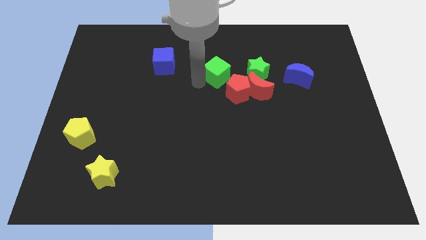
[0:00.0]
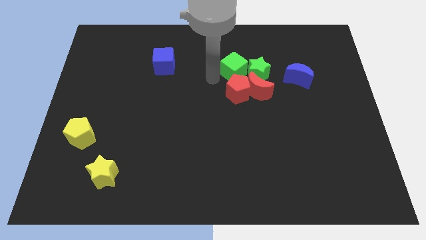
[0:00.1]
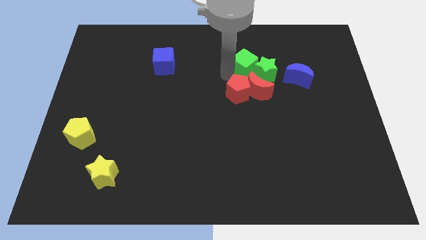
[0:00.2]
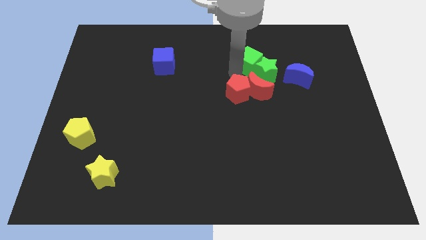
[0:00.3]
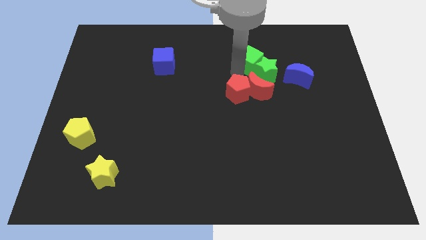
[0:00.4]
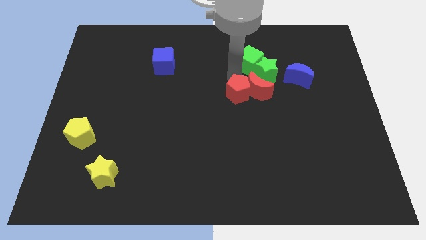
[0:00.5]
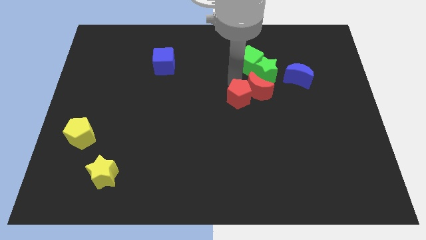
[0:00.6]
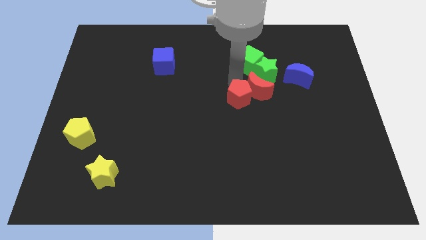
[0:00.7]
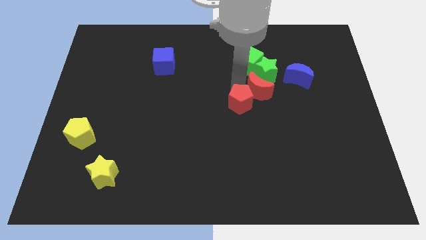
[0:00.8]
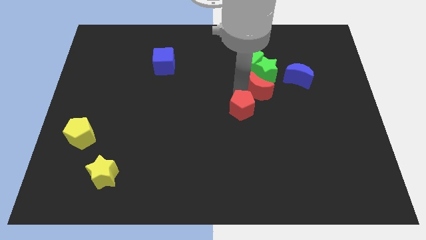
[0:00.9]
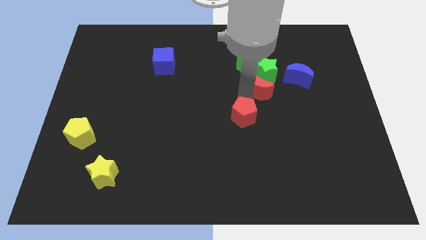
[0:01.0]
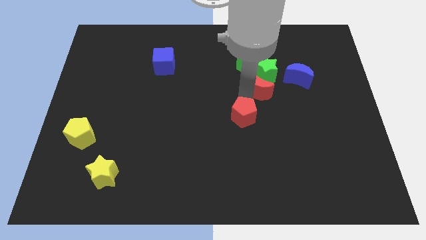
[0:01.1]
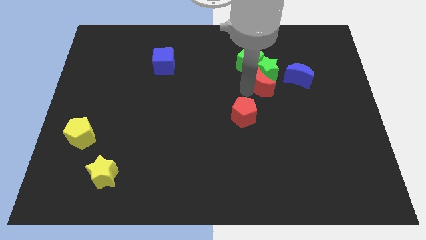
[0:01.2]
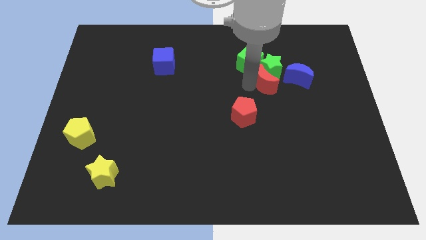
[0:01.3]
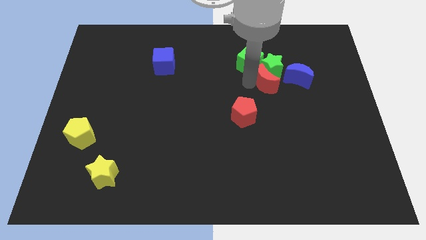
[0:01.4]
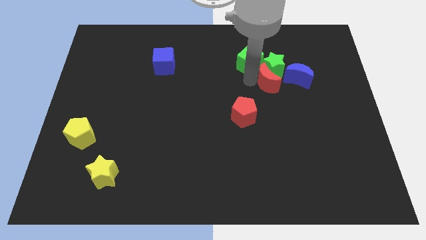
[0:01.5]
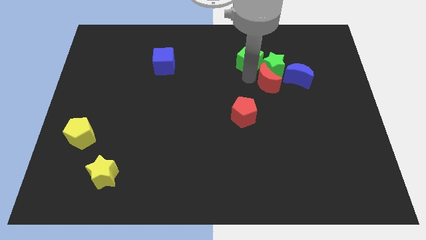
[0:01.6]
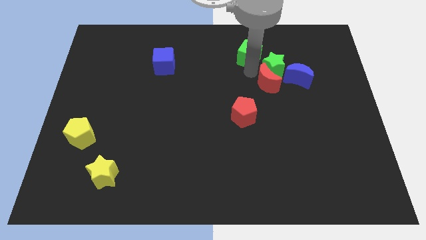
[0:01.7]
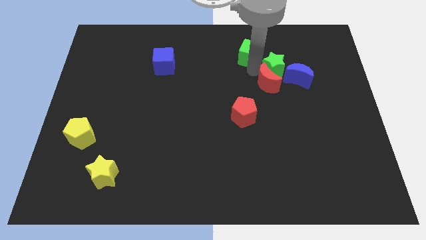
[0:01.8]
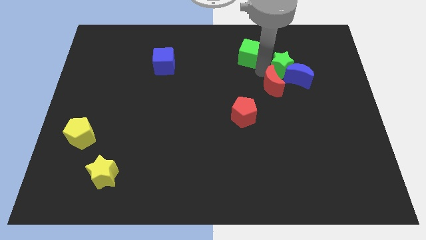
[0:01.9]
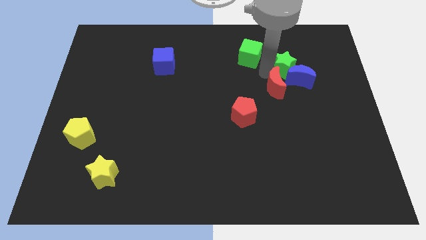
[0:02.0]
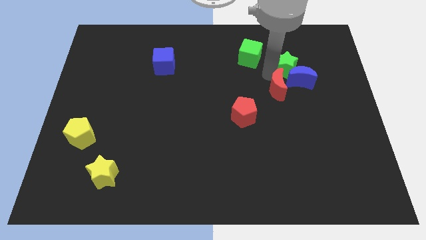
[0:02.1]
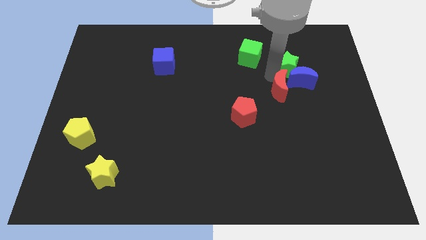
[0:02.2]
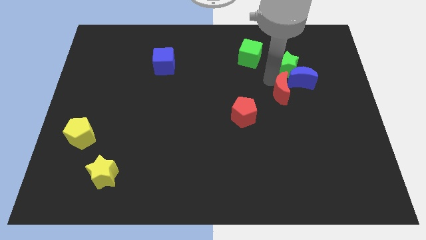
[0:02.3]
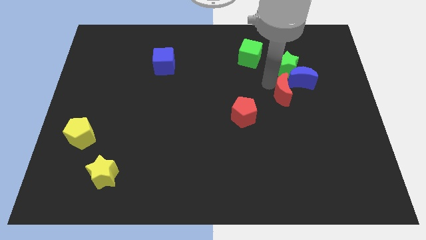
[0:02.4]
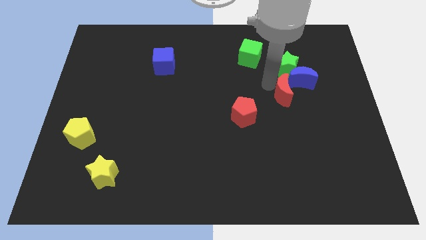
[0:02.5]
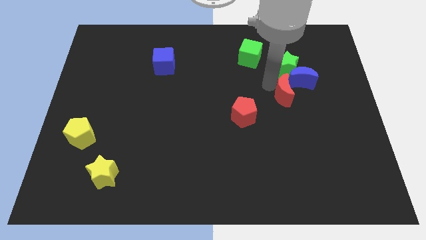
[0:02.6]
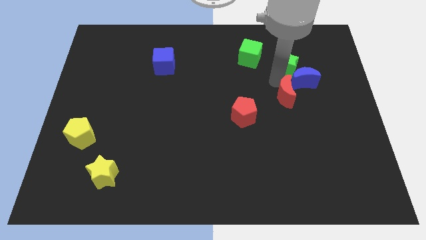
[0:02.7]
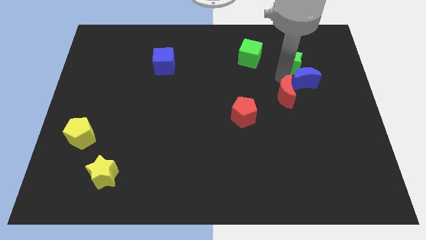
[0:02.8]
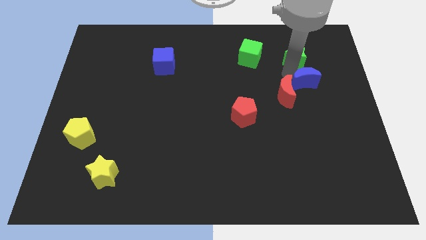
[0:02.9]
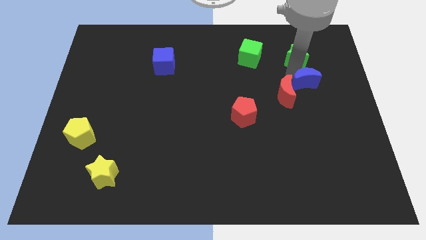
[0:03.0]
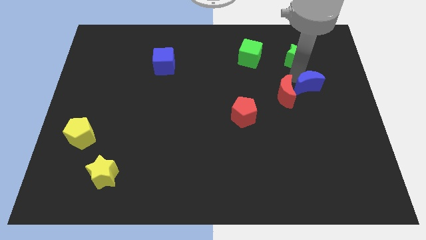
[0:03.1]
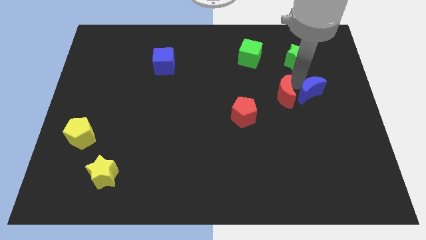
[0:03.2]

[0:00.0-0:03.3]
separate the red pentagon from the red moon

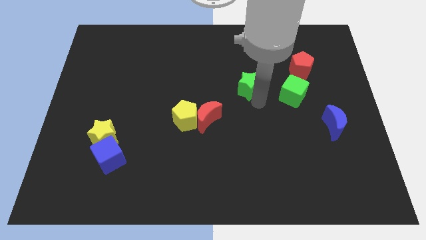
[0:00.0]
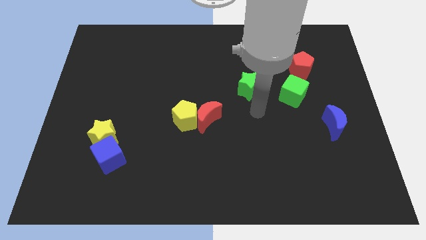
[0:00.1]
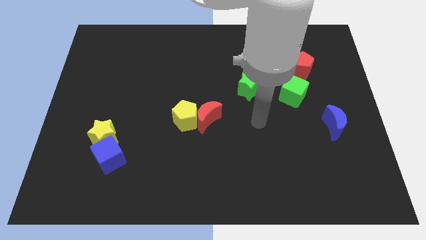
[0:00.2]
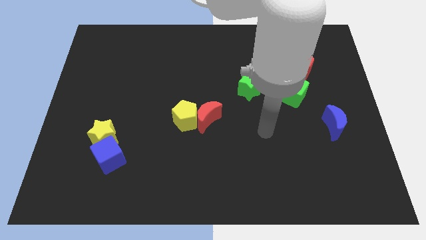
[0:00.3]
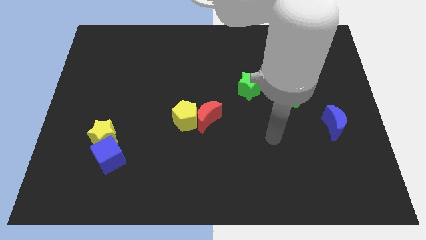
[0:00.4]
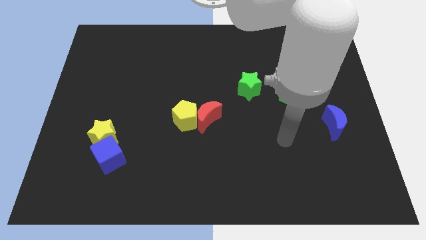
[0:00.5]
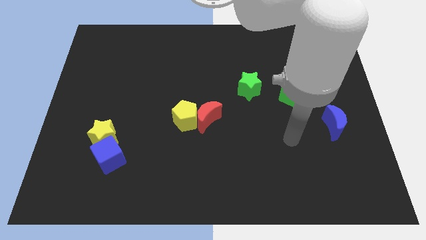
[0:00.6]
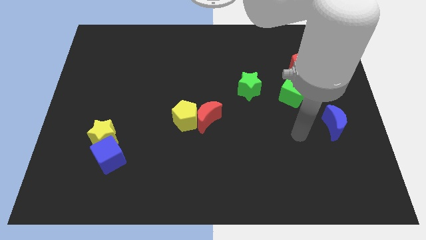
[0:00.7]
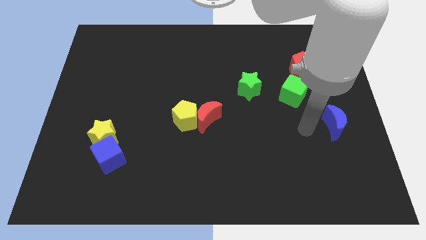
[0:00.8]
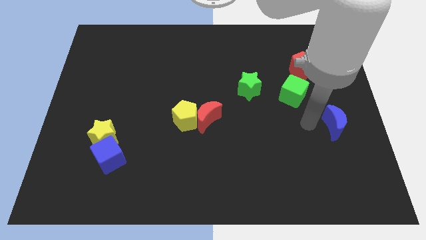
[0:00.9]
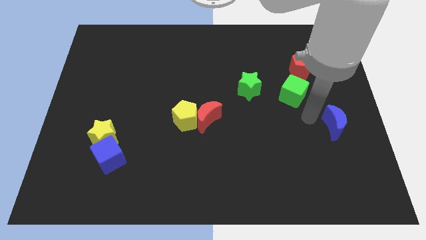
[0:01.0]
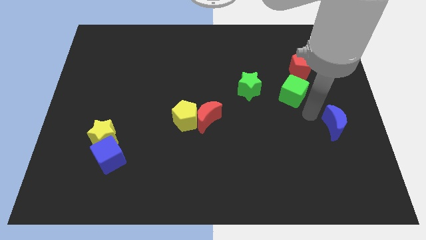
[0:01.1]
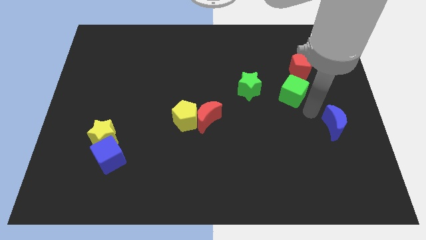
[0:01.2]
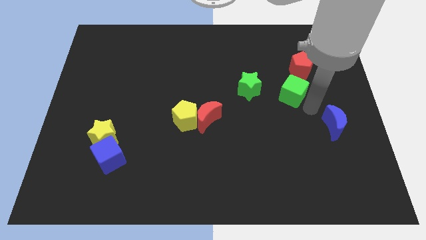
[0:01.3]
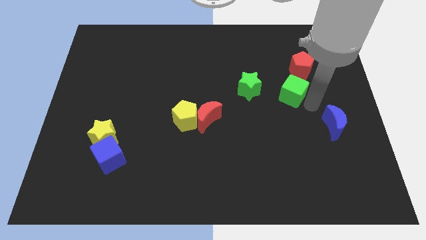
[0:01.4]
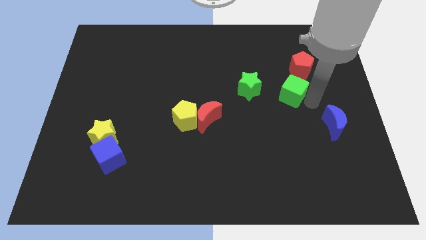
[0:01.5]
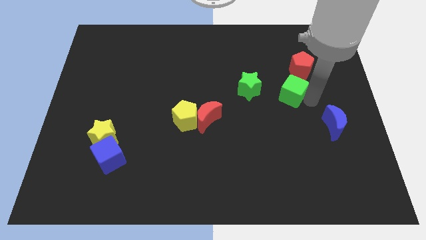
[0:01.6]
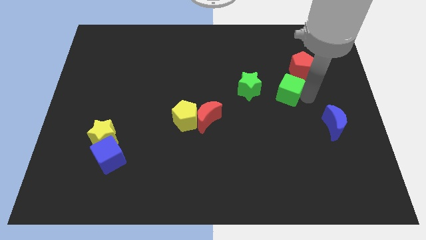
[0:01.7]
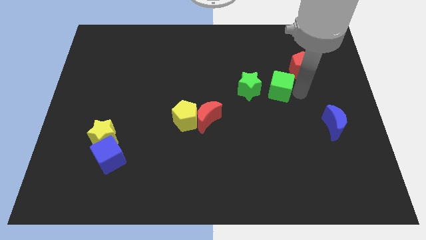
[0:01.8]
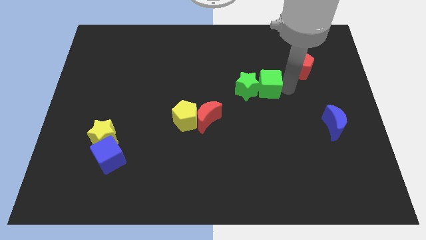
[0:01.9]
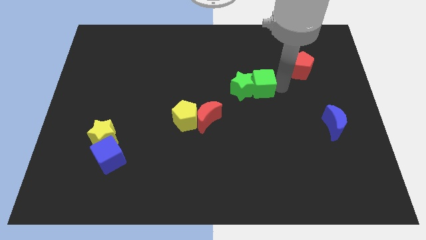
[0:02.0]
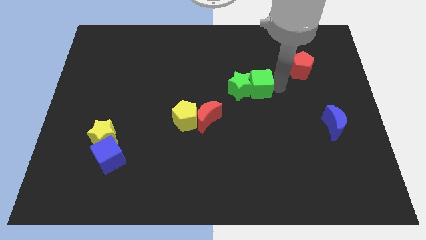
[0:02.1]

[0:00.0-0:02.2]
slide the green cube horizontally to the right of the green star

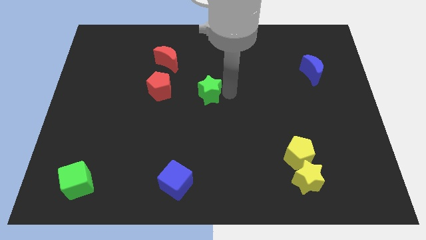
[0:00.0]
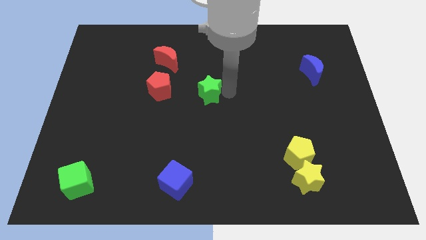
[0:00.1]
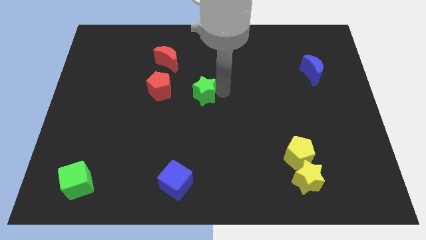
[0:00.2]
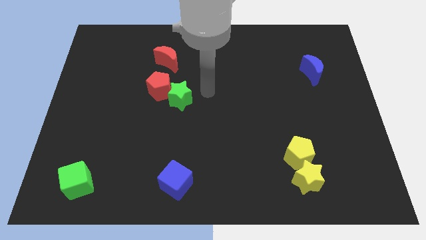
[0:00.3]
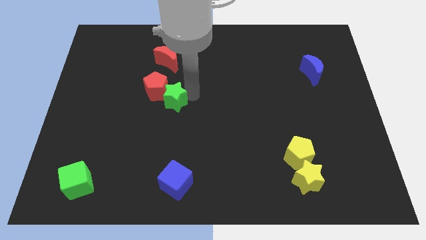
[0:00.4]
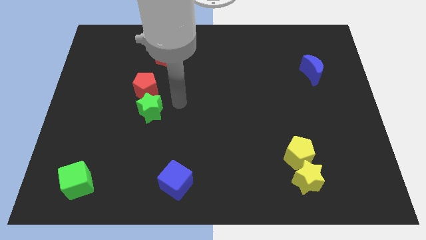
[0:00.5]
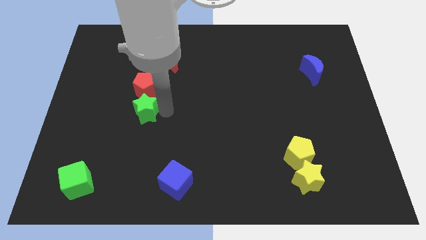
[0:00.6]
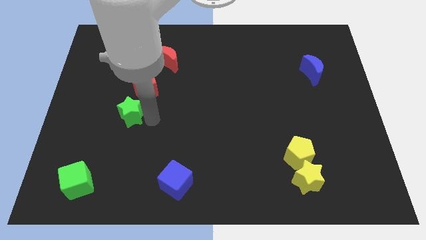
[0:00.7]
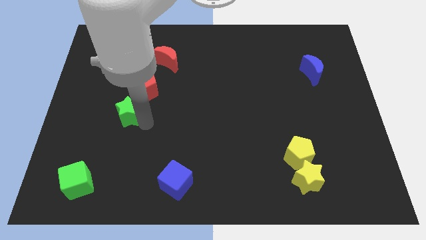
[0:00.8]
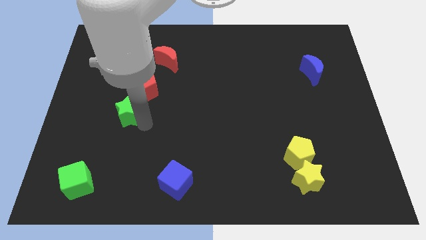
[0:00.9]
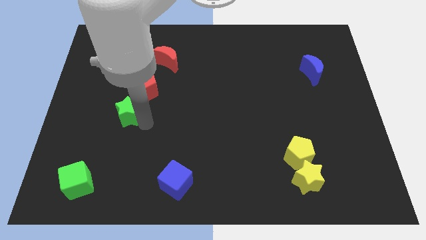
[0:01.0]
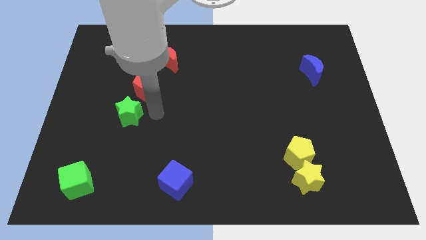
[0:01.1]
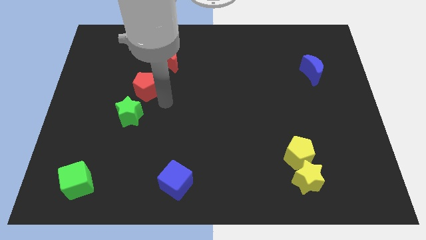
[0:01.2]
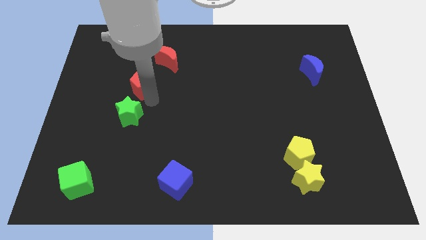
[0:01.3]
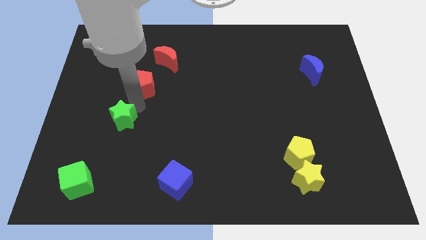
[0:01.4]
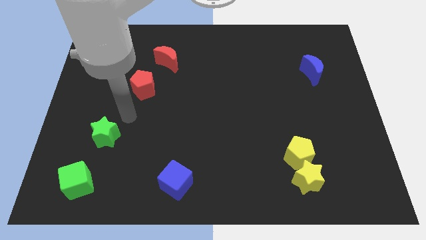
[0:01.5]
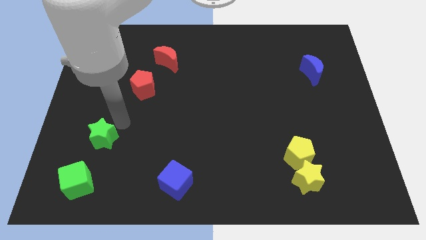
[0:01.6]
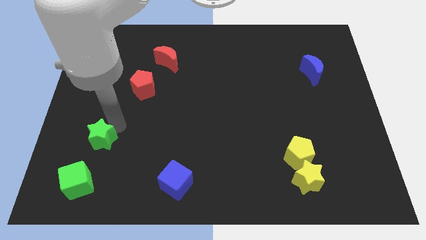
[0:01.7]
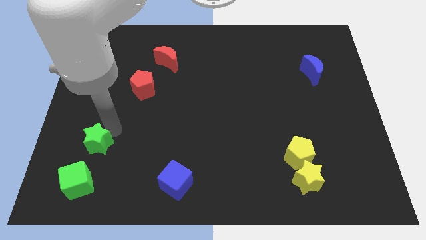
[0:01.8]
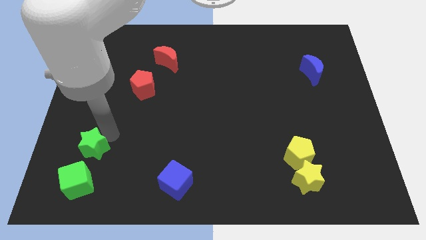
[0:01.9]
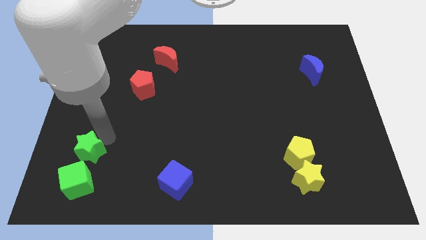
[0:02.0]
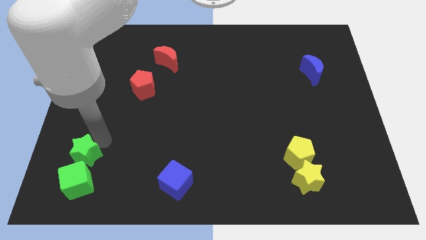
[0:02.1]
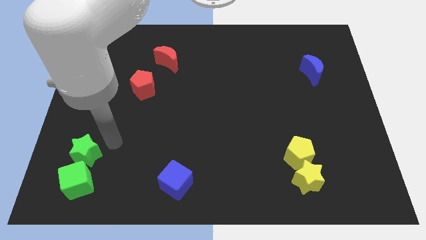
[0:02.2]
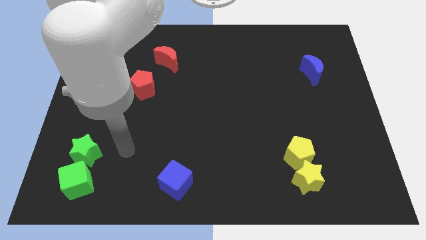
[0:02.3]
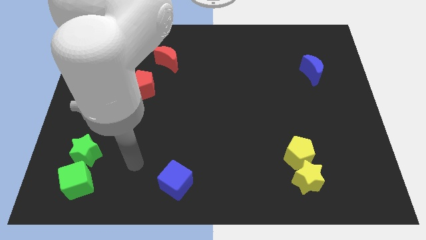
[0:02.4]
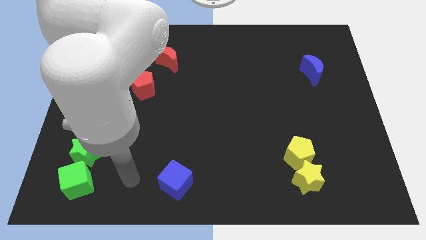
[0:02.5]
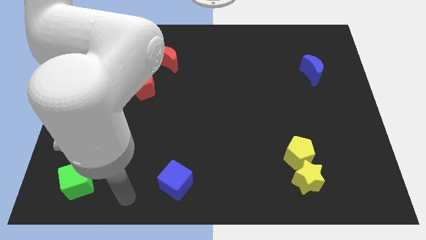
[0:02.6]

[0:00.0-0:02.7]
slide the green star close to the green cube

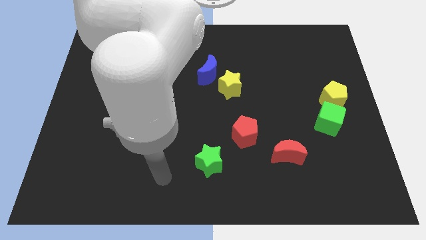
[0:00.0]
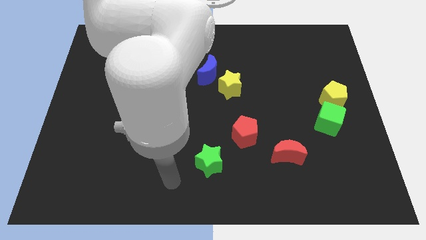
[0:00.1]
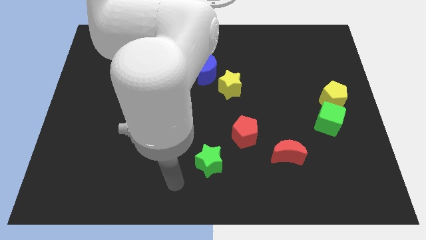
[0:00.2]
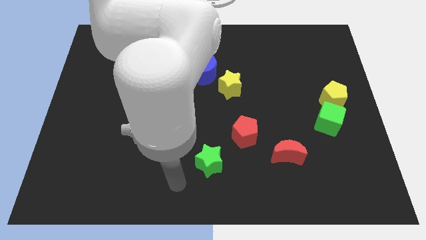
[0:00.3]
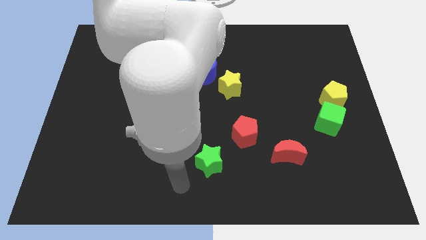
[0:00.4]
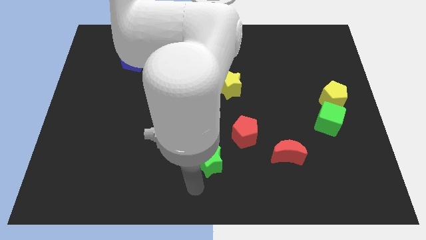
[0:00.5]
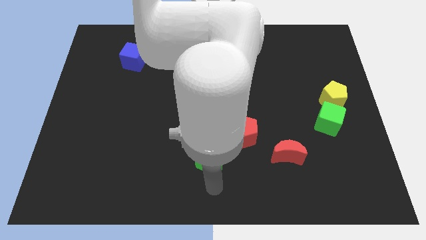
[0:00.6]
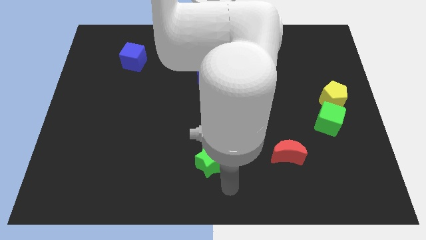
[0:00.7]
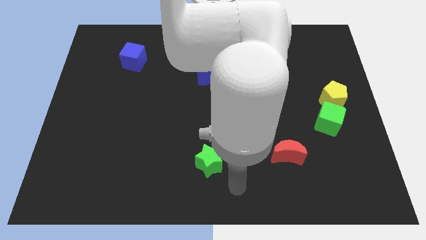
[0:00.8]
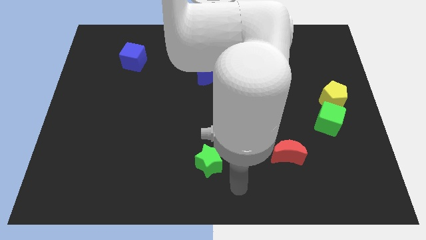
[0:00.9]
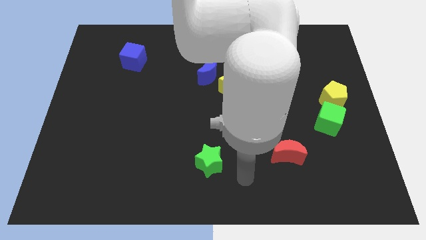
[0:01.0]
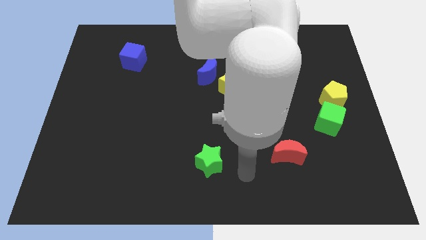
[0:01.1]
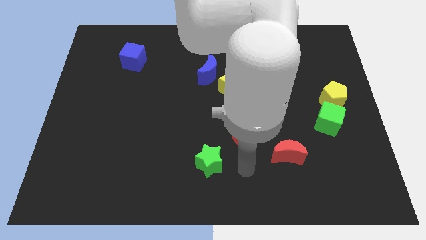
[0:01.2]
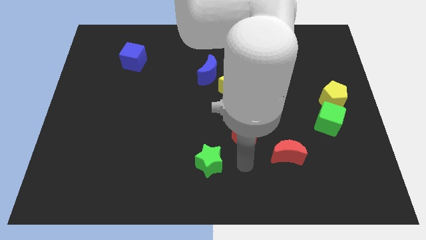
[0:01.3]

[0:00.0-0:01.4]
move your arm in between the green star and red crescent
